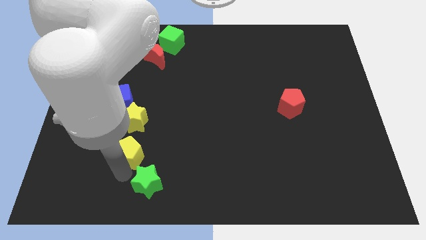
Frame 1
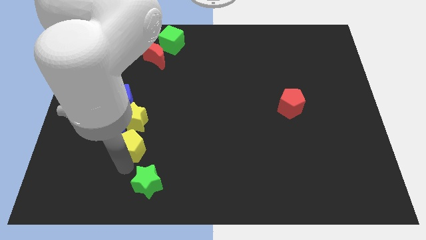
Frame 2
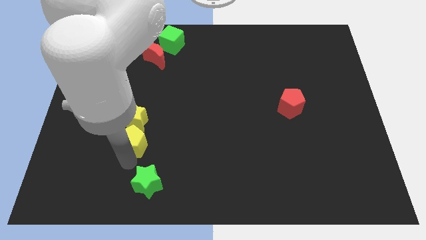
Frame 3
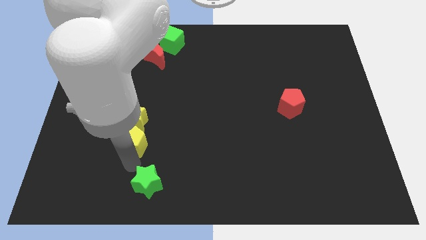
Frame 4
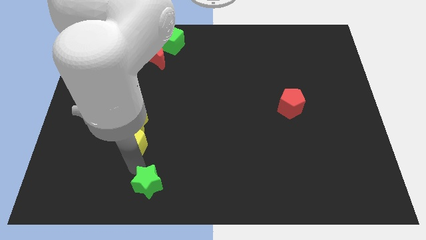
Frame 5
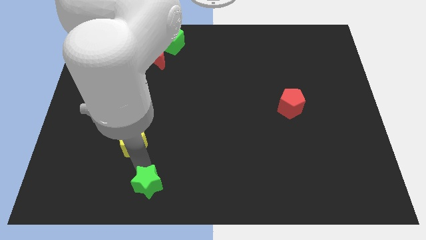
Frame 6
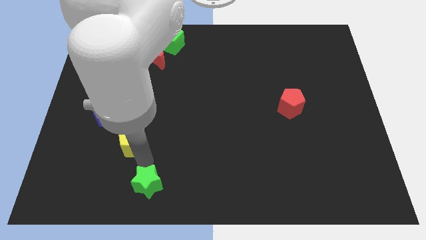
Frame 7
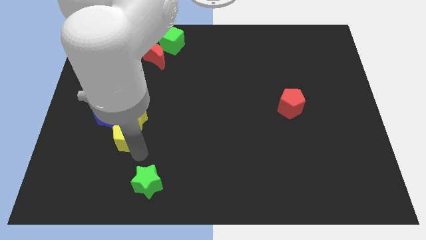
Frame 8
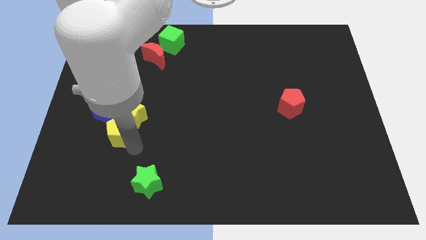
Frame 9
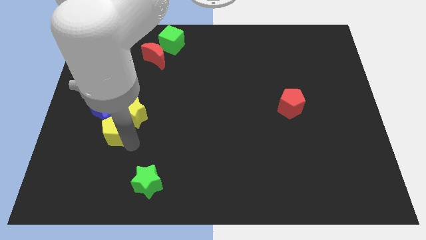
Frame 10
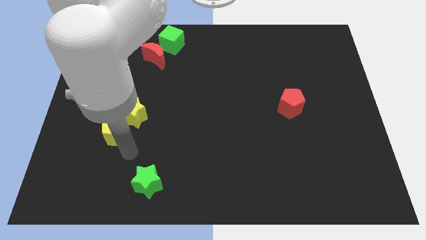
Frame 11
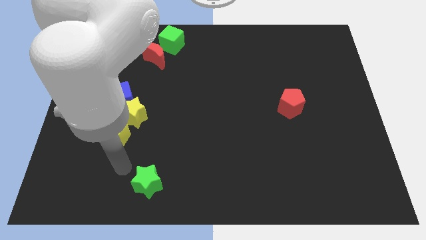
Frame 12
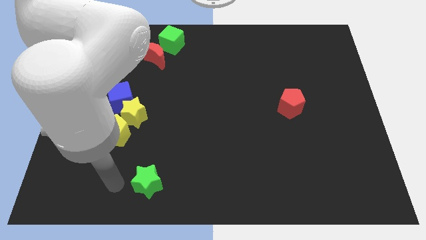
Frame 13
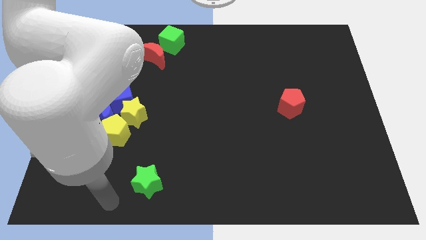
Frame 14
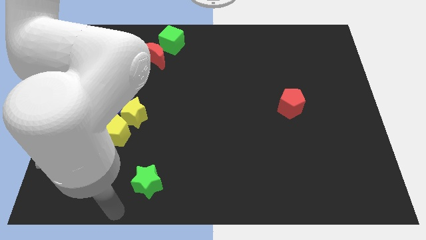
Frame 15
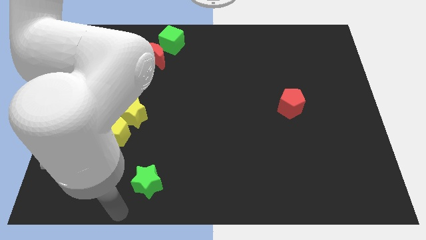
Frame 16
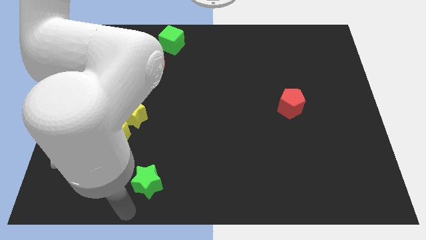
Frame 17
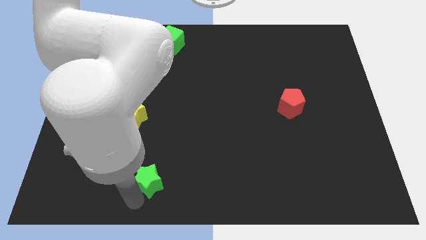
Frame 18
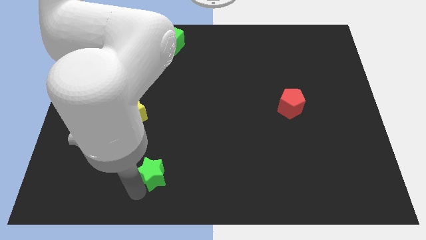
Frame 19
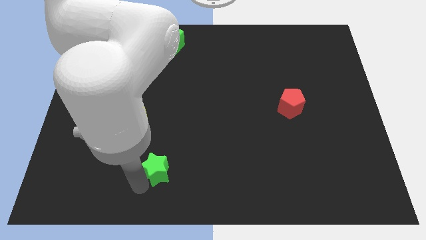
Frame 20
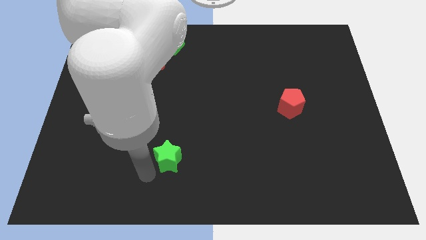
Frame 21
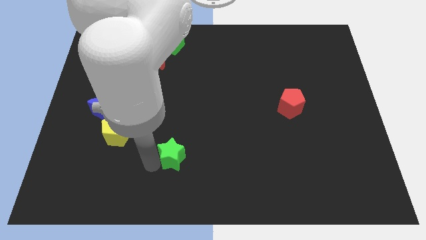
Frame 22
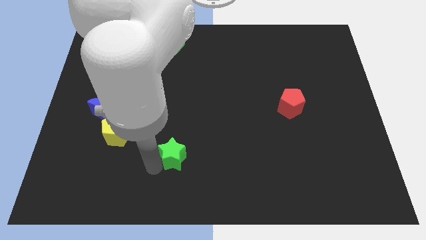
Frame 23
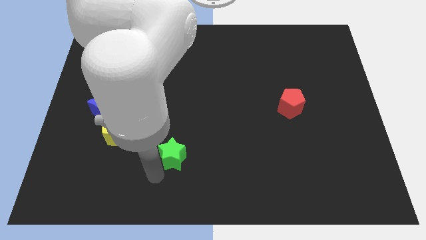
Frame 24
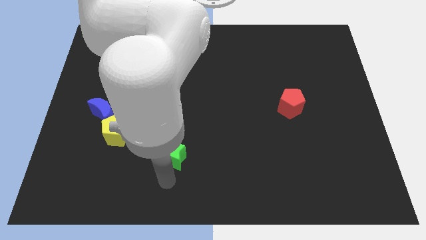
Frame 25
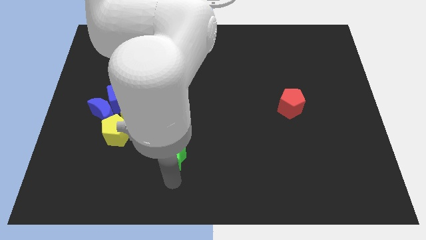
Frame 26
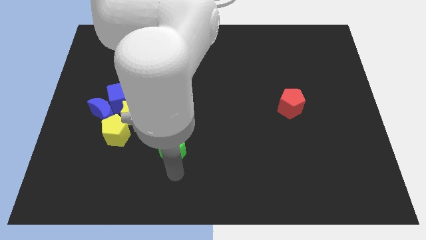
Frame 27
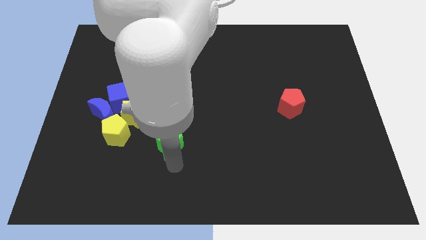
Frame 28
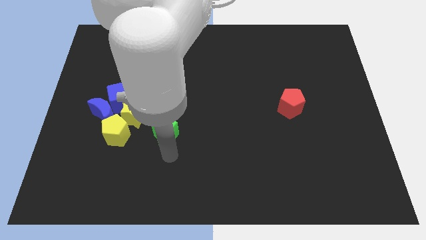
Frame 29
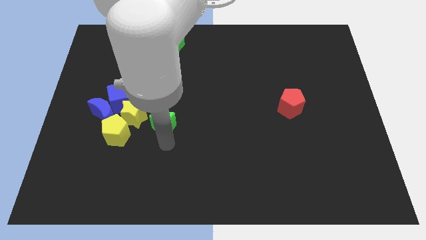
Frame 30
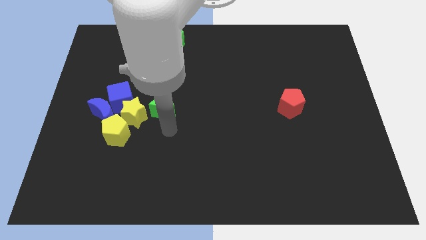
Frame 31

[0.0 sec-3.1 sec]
place green star beside yellow star

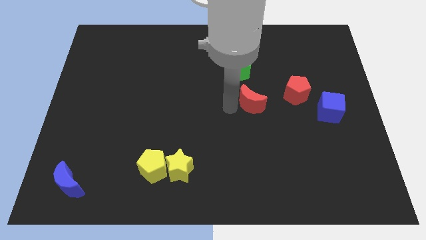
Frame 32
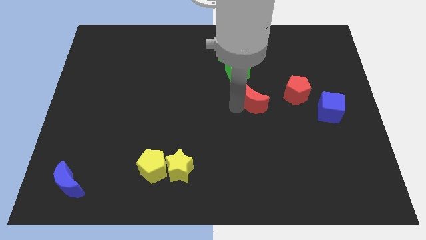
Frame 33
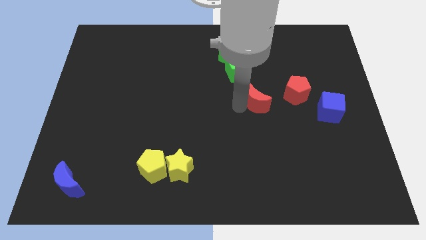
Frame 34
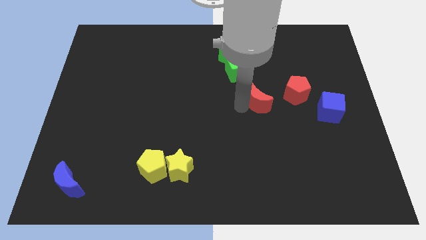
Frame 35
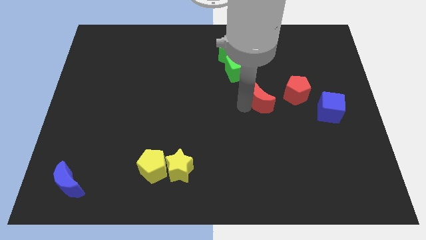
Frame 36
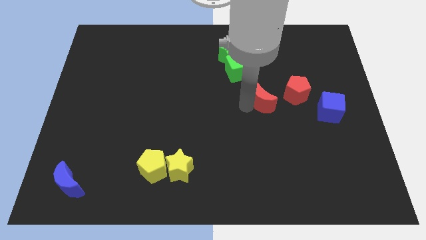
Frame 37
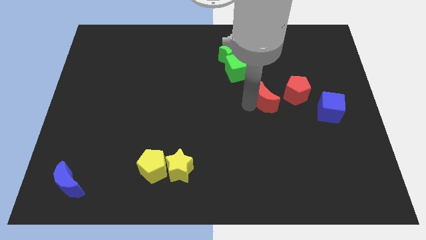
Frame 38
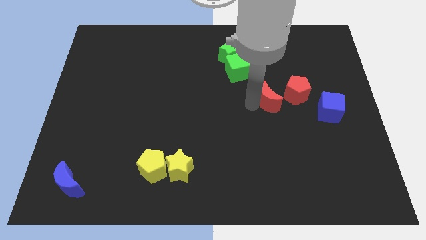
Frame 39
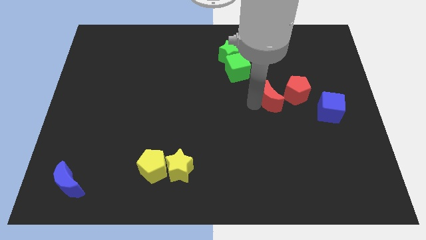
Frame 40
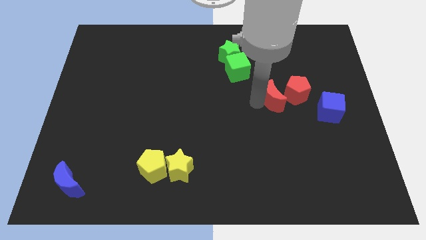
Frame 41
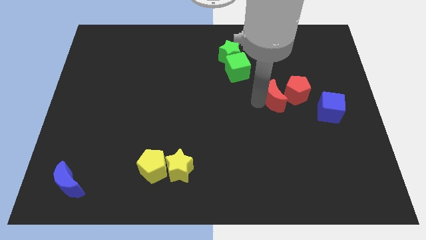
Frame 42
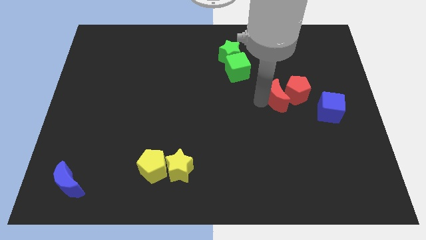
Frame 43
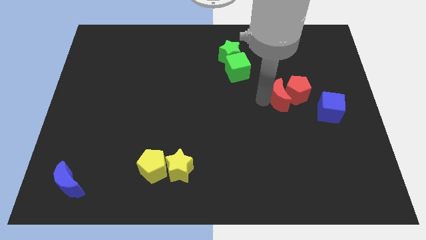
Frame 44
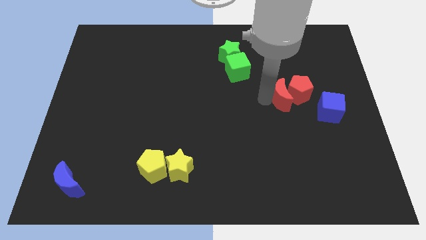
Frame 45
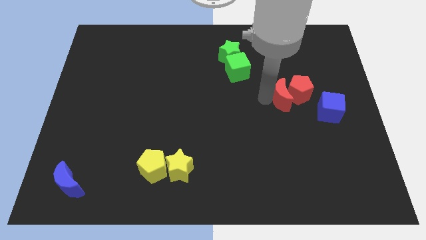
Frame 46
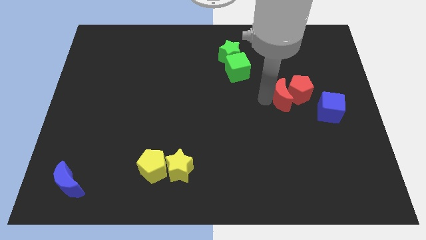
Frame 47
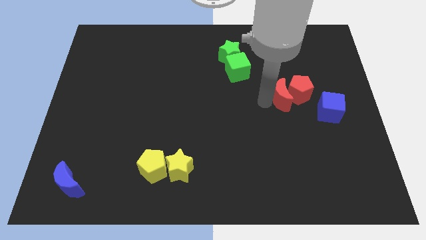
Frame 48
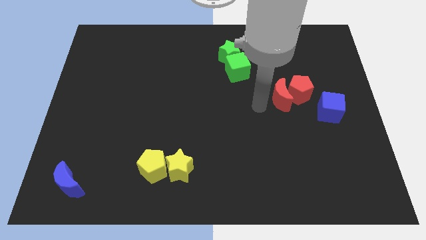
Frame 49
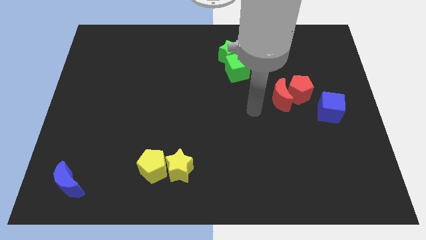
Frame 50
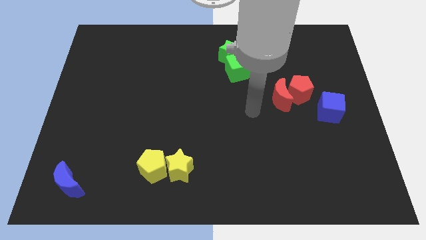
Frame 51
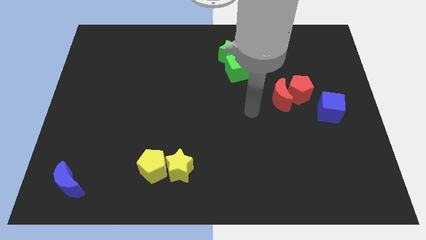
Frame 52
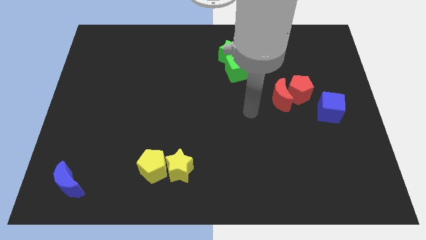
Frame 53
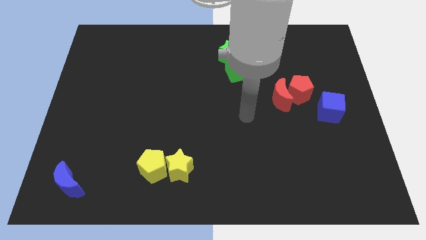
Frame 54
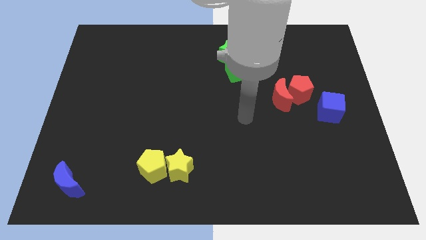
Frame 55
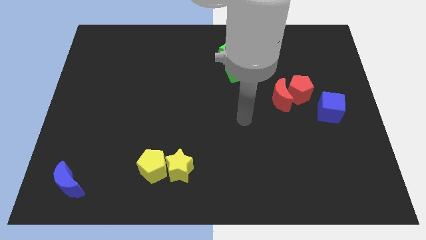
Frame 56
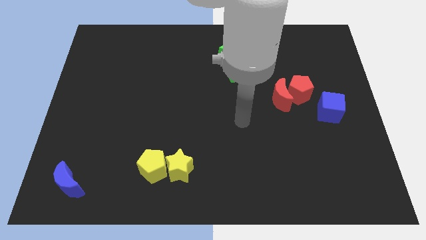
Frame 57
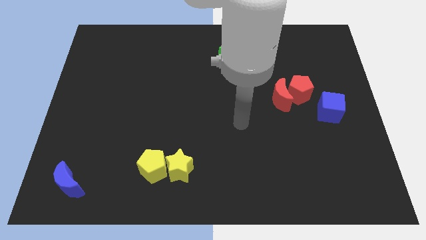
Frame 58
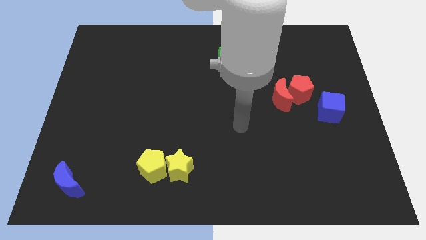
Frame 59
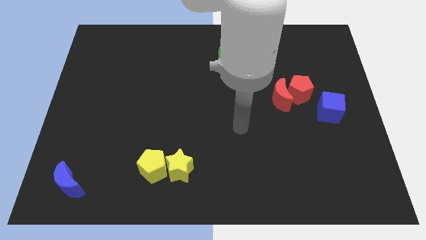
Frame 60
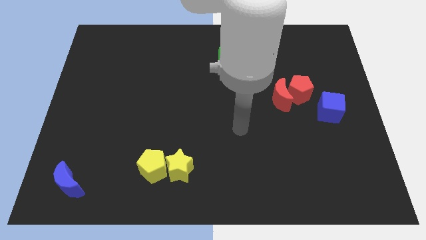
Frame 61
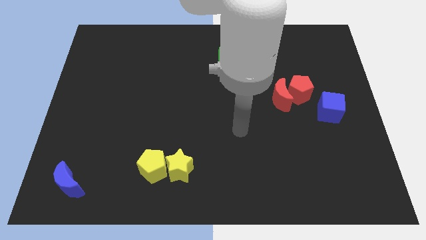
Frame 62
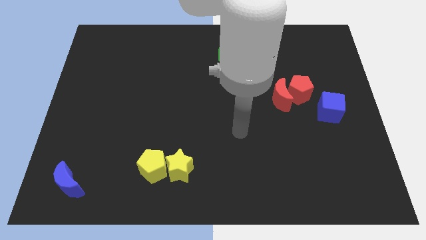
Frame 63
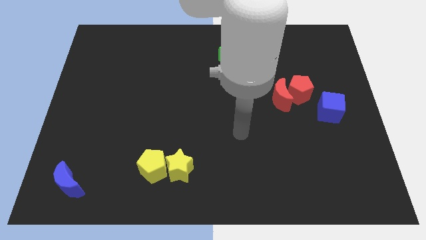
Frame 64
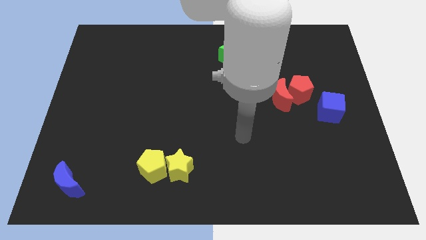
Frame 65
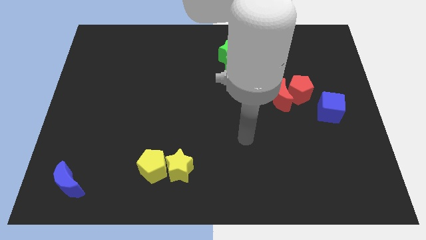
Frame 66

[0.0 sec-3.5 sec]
group up the red blocks vertical to the group of yellow blocks

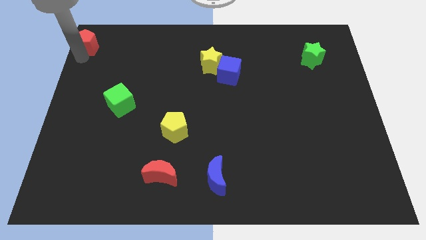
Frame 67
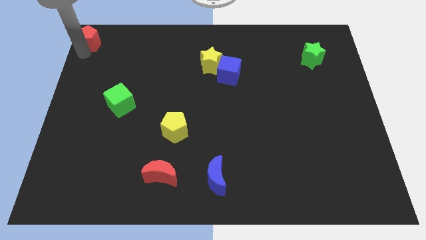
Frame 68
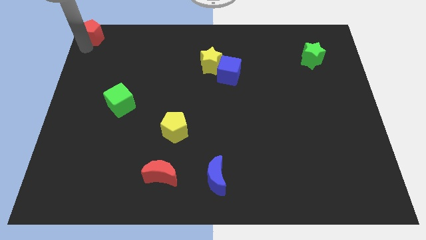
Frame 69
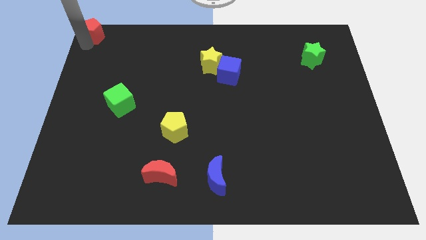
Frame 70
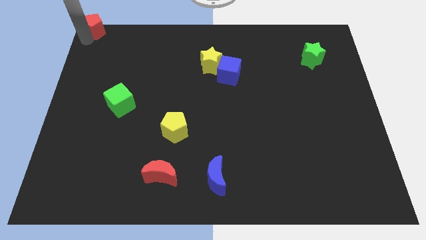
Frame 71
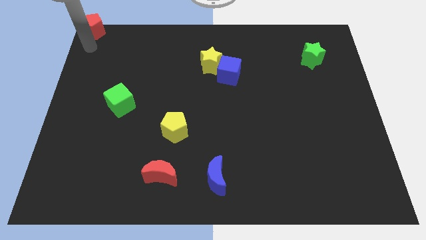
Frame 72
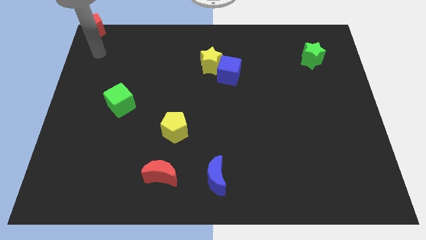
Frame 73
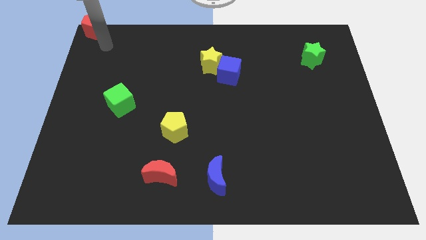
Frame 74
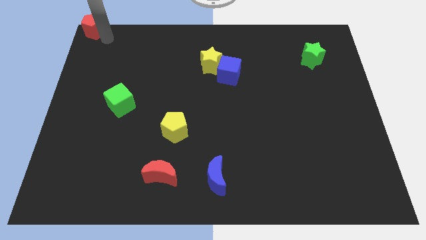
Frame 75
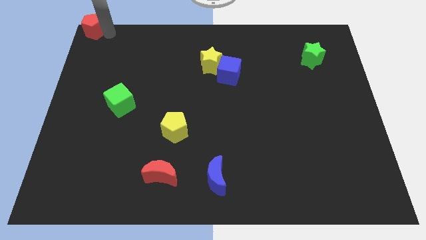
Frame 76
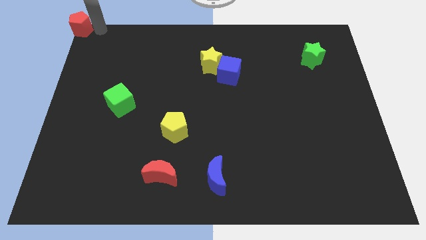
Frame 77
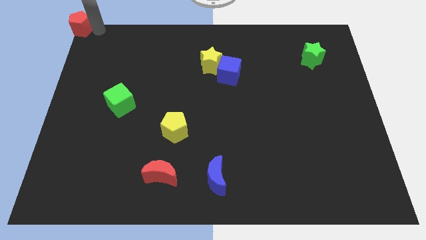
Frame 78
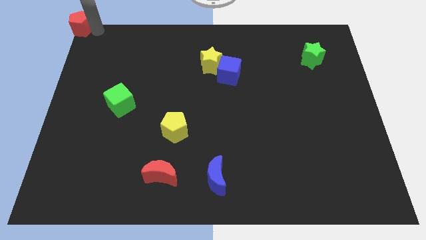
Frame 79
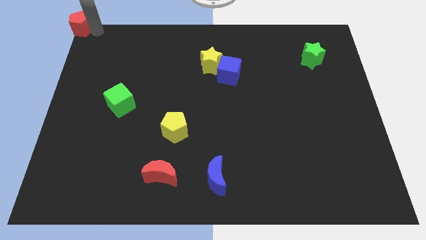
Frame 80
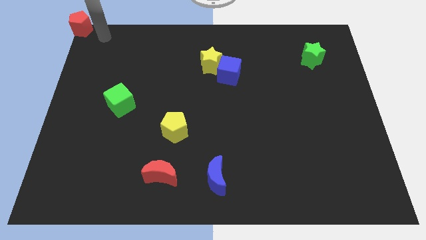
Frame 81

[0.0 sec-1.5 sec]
place the red pentagon at the top left corner of the board

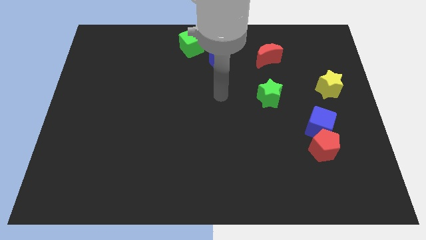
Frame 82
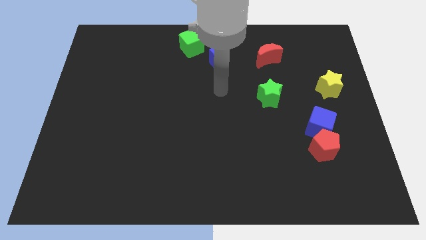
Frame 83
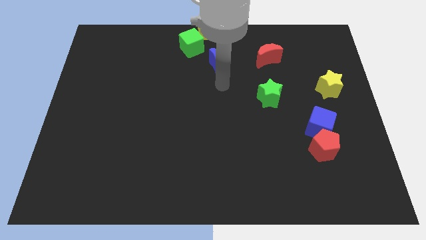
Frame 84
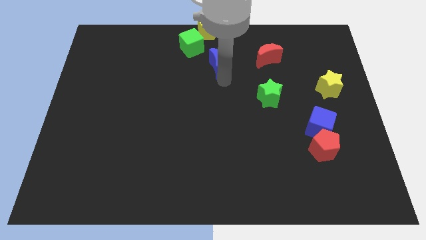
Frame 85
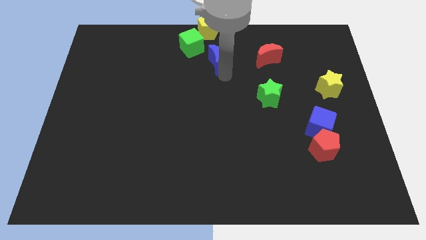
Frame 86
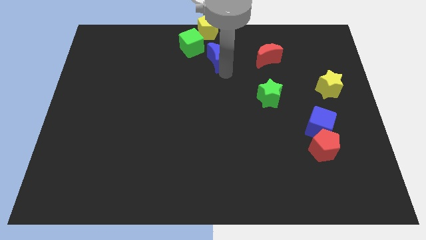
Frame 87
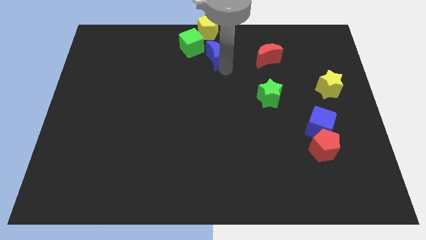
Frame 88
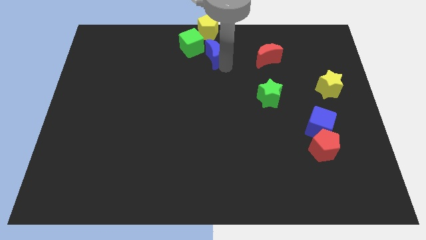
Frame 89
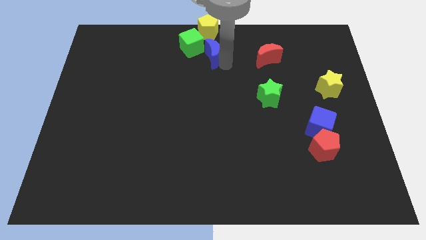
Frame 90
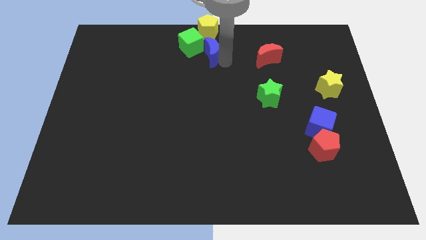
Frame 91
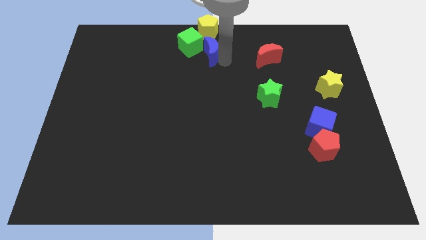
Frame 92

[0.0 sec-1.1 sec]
slide the blue crescent into the right side of the green cube
